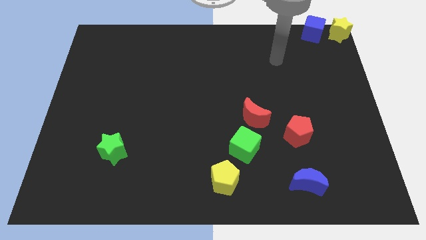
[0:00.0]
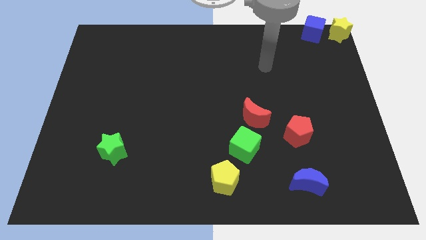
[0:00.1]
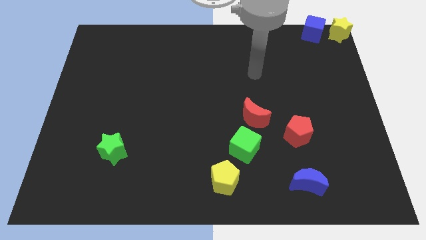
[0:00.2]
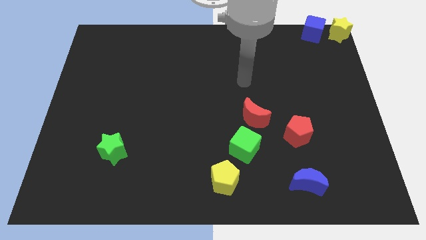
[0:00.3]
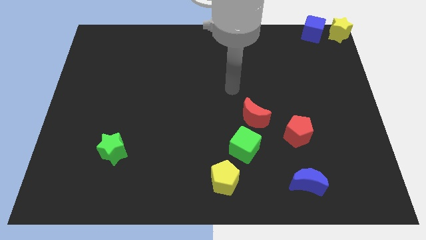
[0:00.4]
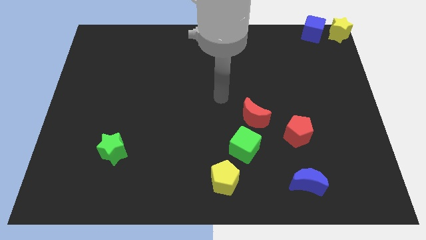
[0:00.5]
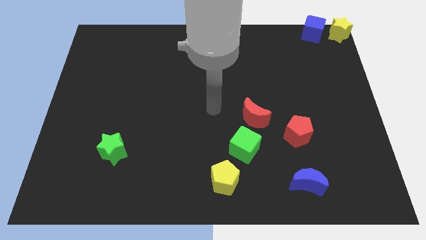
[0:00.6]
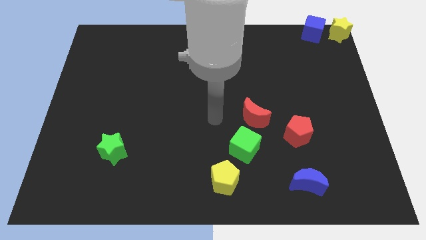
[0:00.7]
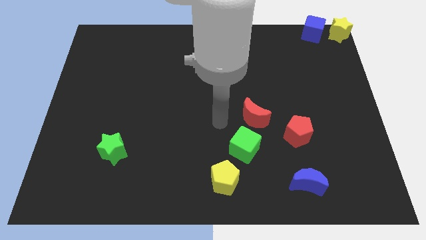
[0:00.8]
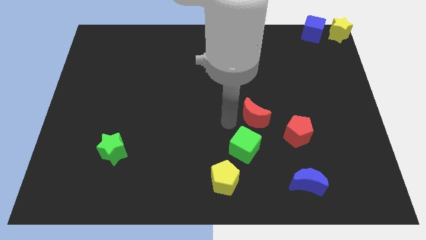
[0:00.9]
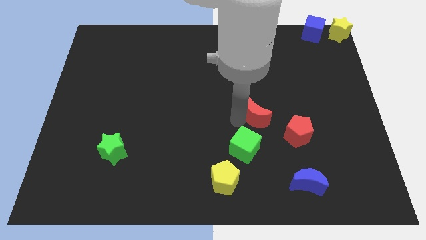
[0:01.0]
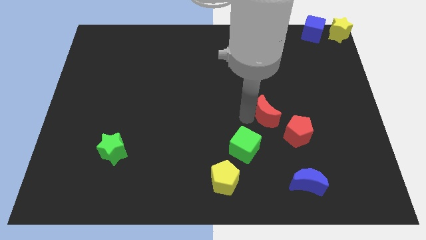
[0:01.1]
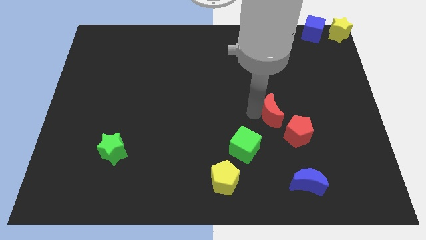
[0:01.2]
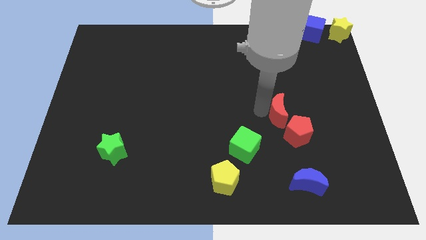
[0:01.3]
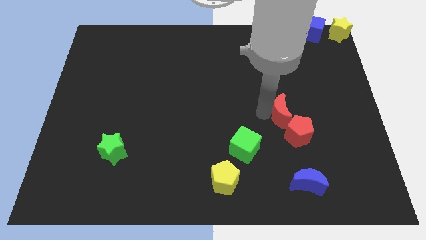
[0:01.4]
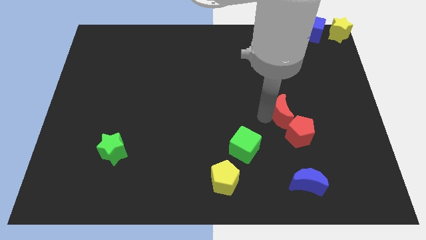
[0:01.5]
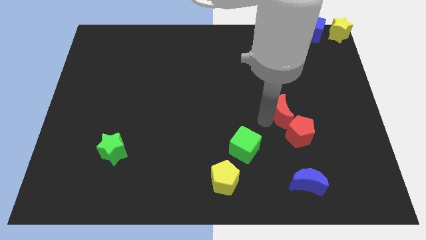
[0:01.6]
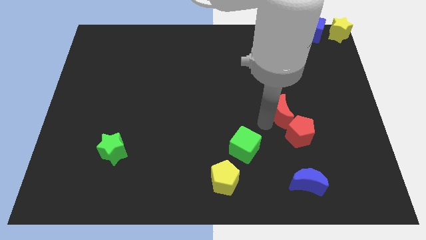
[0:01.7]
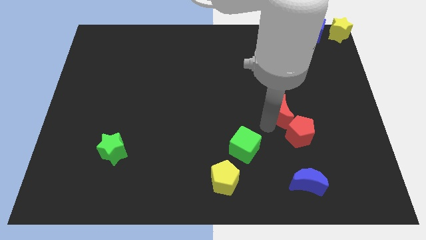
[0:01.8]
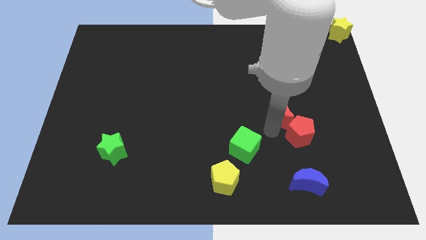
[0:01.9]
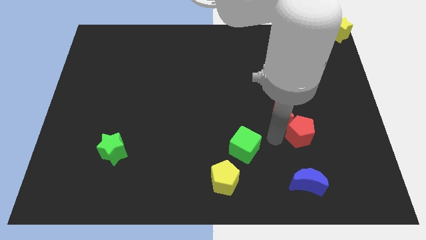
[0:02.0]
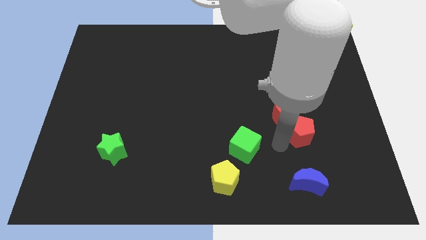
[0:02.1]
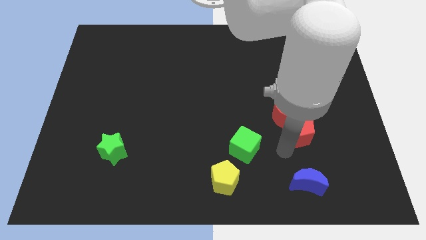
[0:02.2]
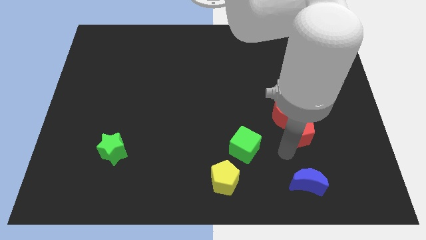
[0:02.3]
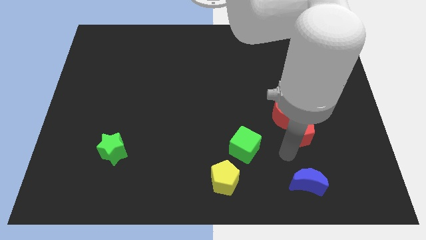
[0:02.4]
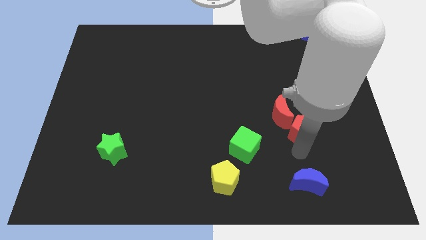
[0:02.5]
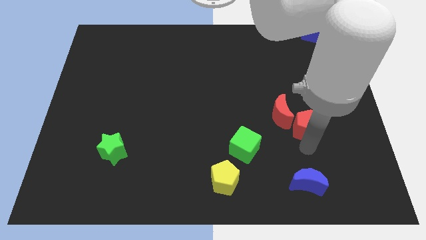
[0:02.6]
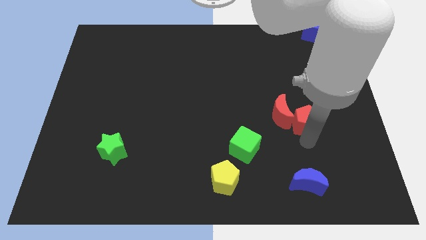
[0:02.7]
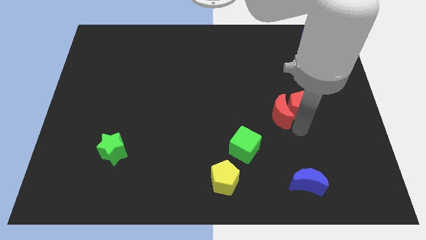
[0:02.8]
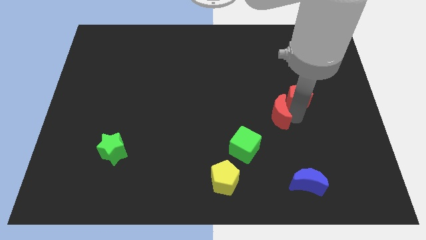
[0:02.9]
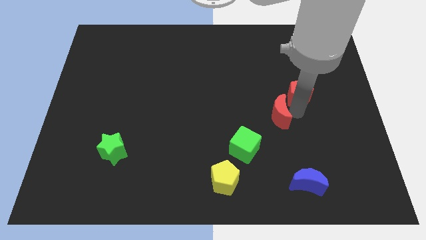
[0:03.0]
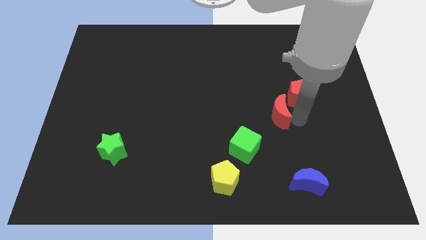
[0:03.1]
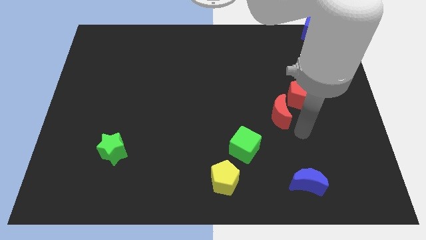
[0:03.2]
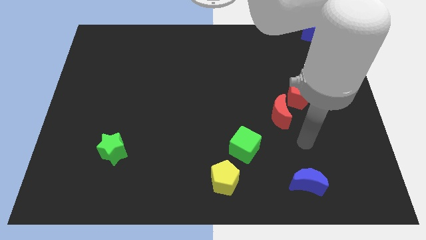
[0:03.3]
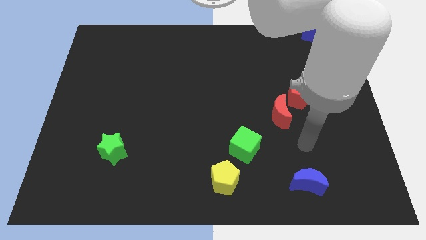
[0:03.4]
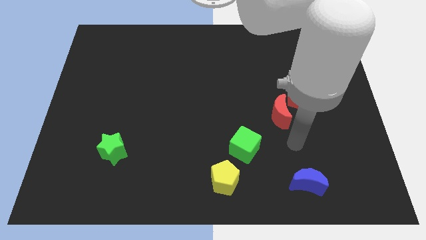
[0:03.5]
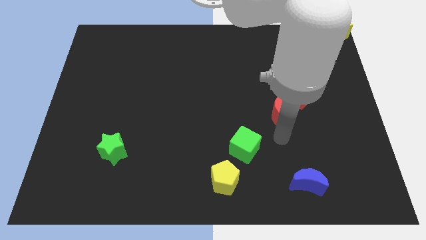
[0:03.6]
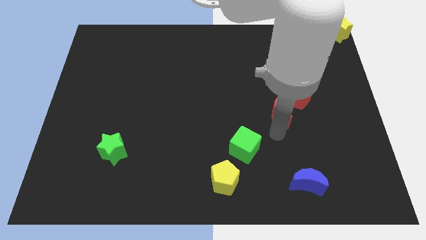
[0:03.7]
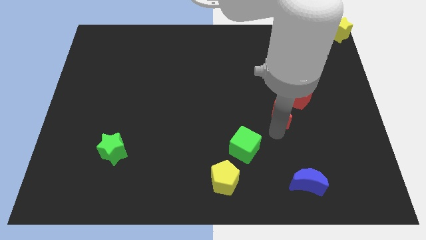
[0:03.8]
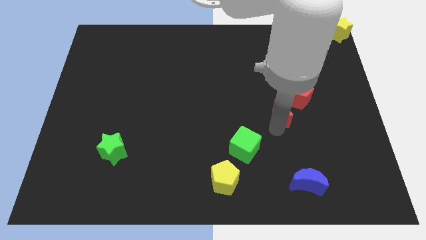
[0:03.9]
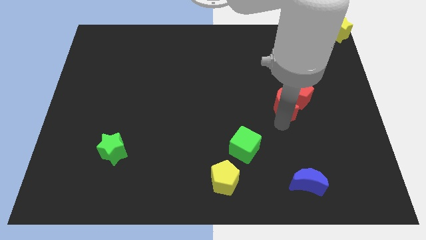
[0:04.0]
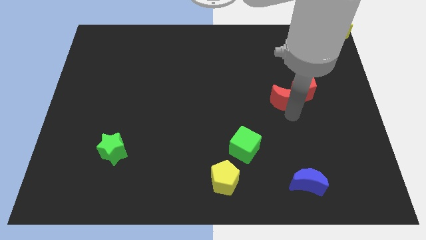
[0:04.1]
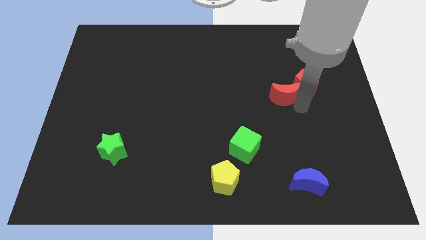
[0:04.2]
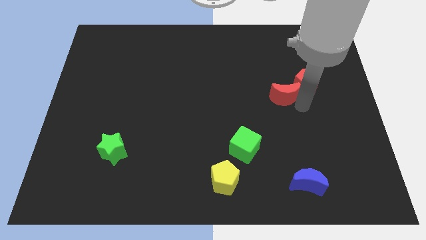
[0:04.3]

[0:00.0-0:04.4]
push the red blocks upwards to the top right

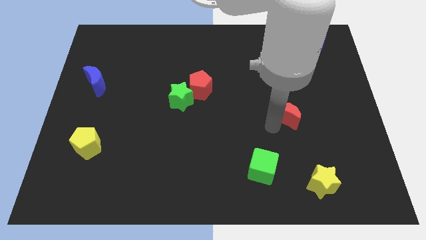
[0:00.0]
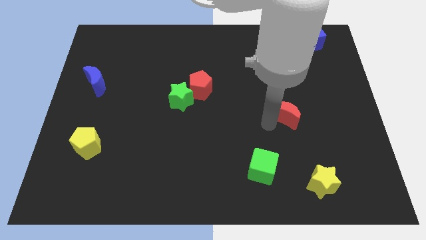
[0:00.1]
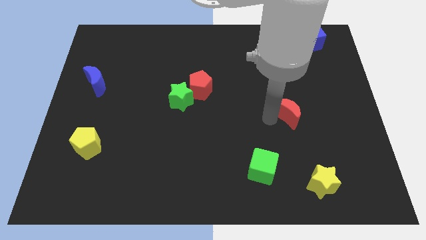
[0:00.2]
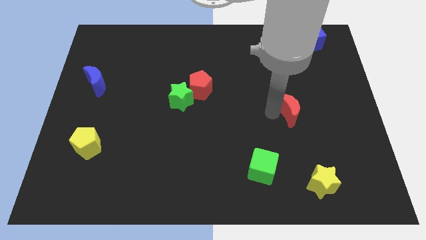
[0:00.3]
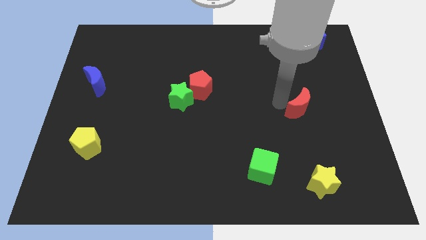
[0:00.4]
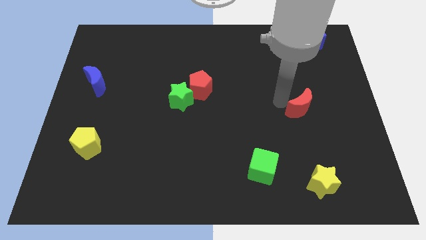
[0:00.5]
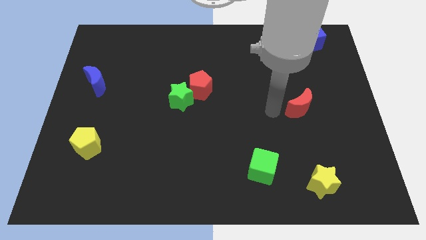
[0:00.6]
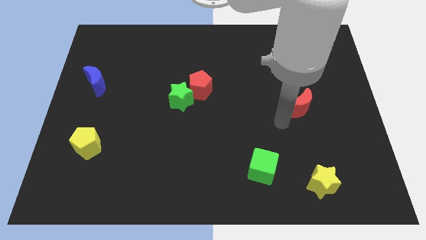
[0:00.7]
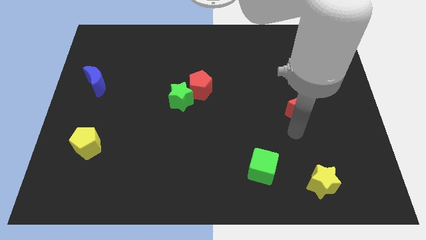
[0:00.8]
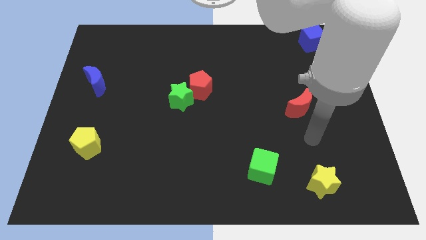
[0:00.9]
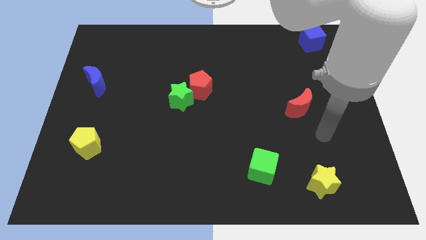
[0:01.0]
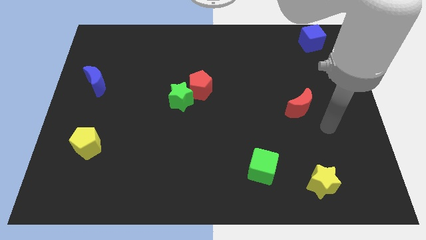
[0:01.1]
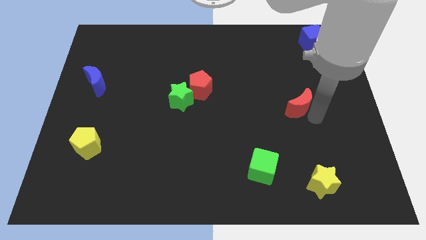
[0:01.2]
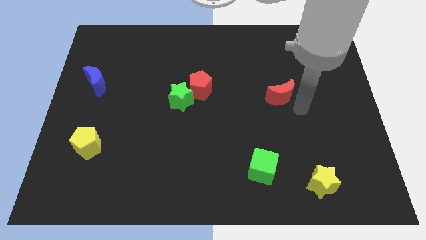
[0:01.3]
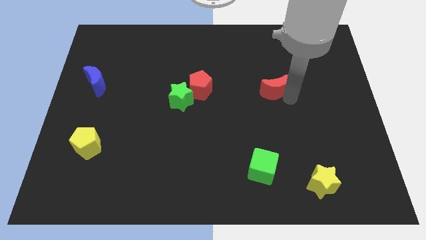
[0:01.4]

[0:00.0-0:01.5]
move the red moon parallel to the right to the red pentagon

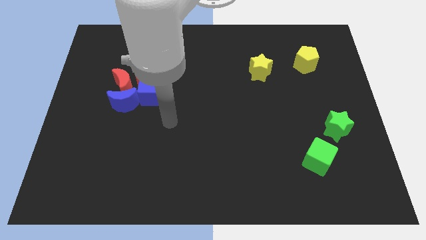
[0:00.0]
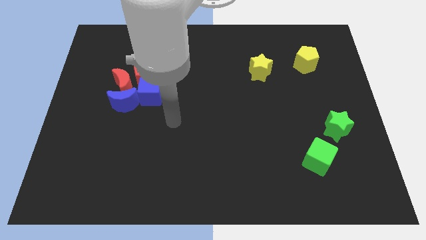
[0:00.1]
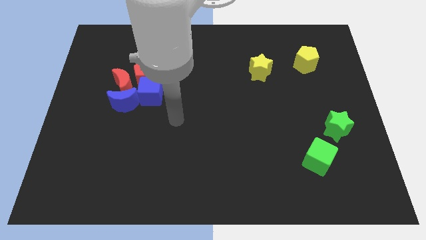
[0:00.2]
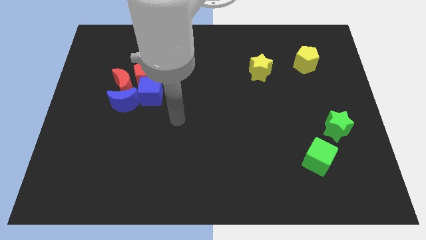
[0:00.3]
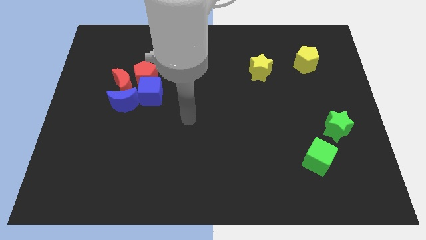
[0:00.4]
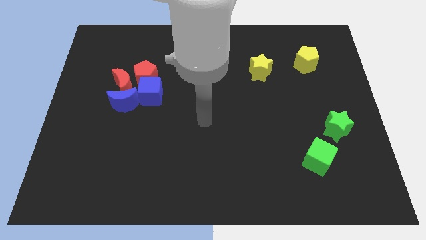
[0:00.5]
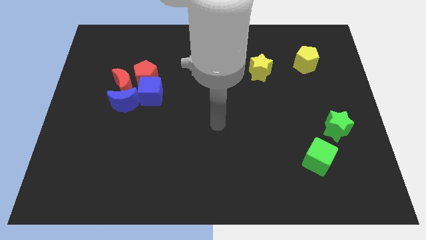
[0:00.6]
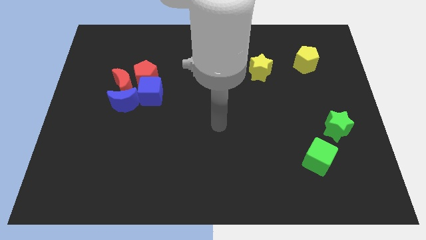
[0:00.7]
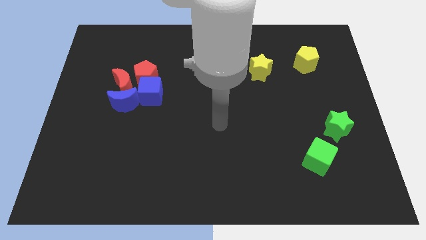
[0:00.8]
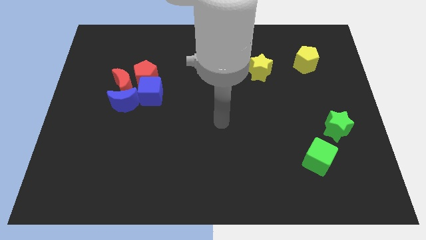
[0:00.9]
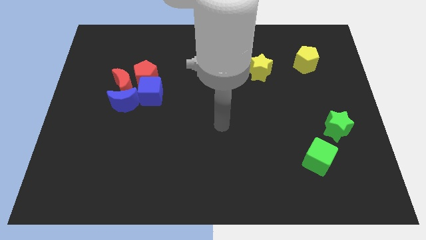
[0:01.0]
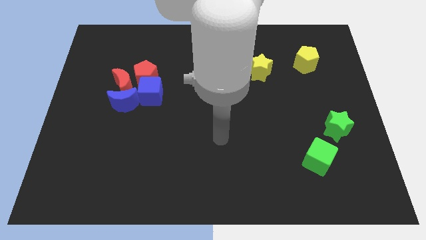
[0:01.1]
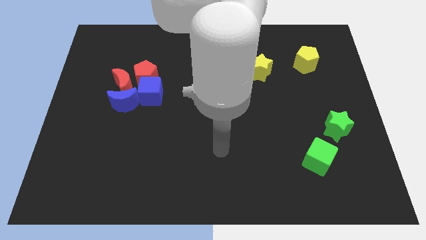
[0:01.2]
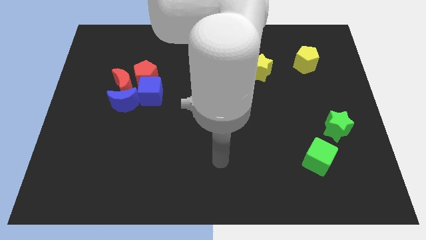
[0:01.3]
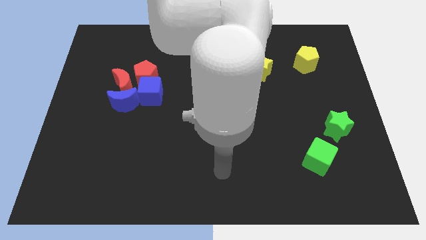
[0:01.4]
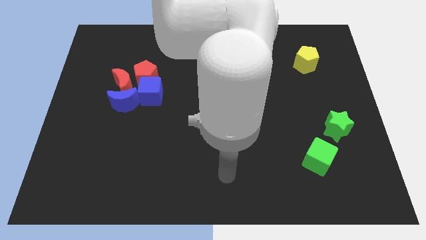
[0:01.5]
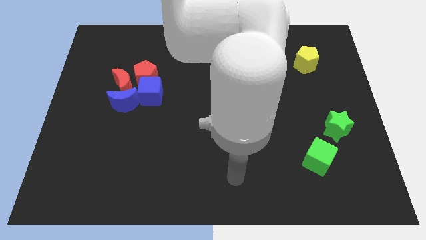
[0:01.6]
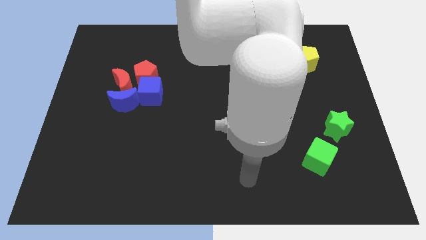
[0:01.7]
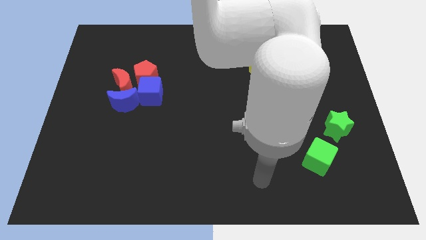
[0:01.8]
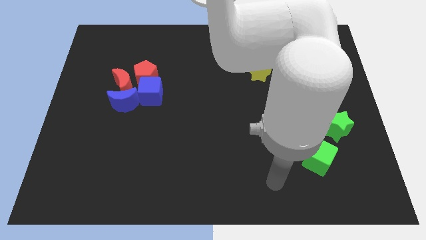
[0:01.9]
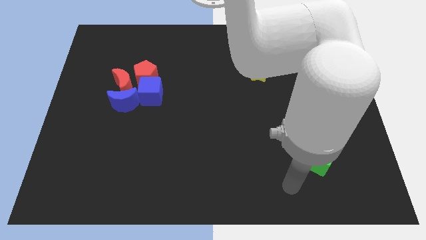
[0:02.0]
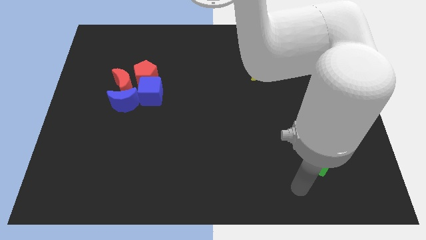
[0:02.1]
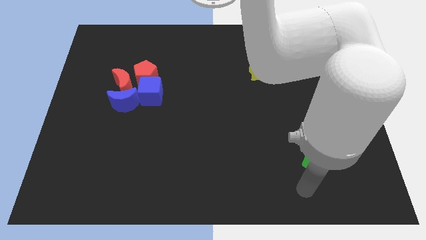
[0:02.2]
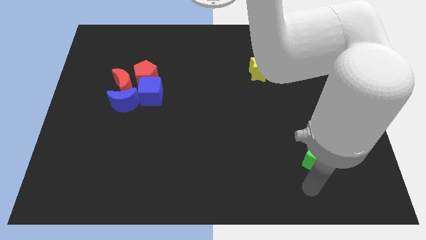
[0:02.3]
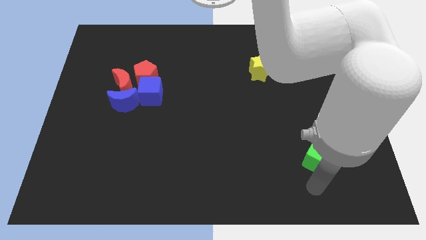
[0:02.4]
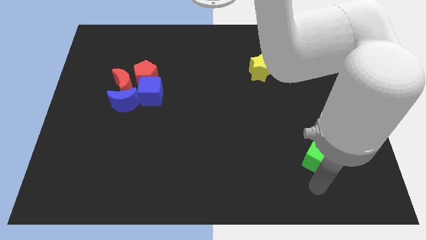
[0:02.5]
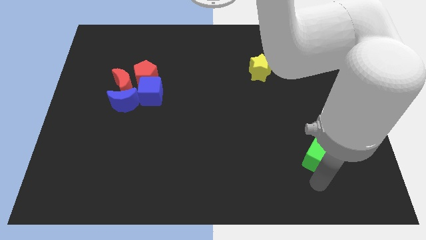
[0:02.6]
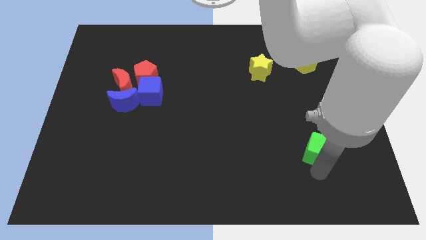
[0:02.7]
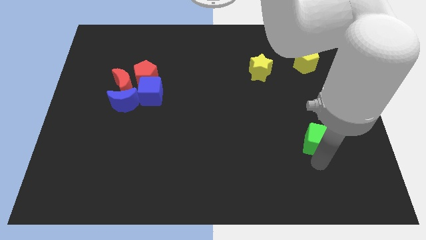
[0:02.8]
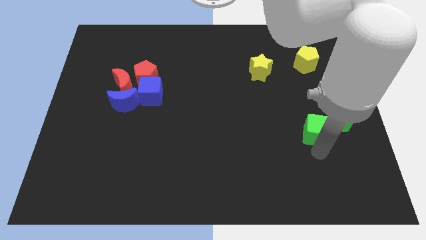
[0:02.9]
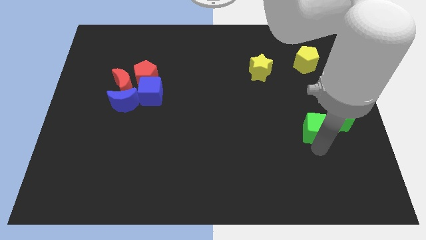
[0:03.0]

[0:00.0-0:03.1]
push green cube into green star
